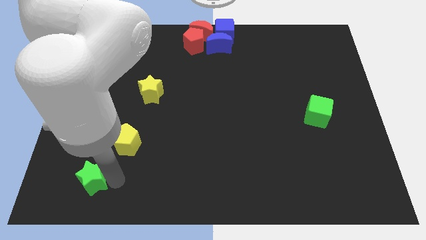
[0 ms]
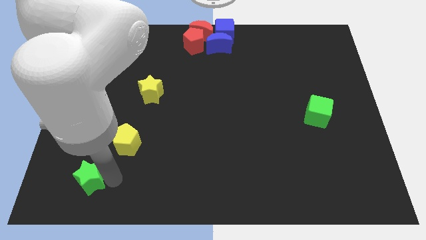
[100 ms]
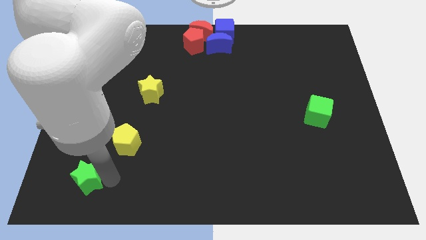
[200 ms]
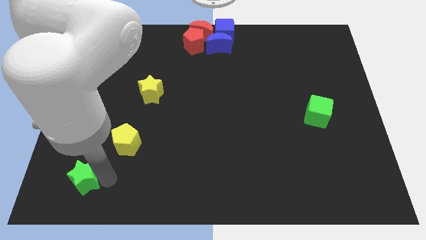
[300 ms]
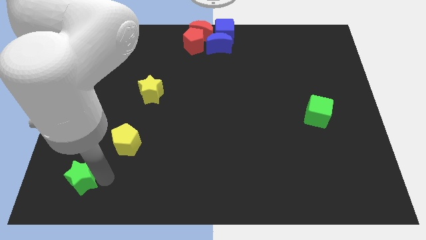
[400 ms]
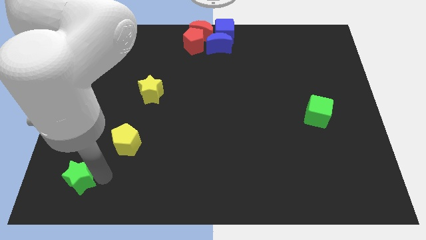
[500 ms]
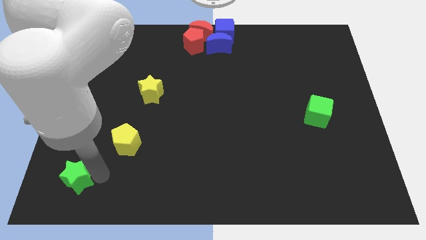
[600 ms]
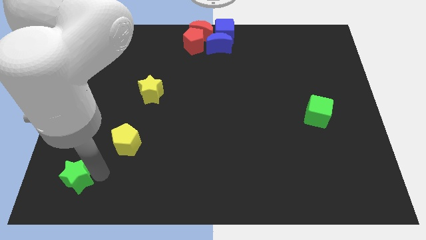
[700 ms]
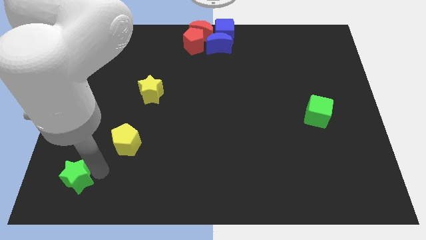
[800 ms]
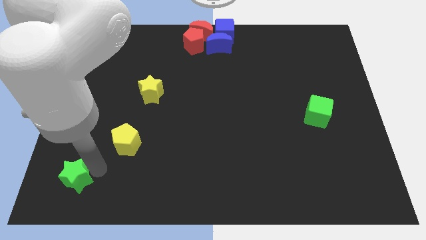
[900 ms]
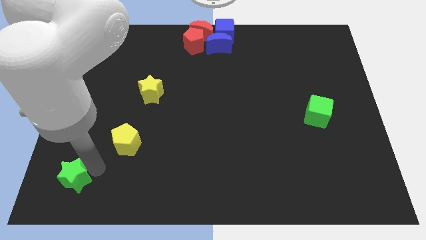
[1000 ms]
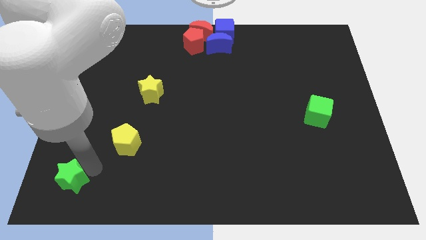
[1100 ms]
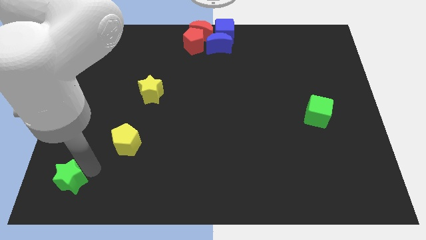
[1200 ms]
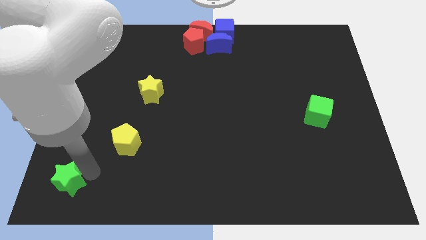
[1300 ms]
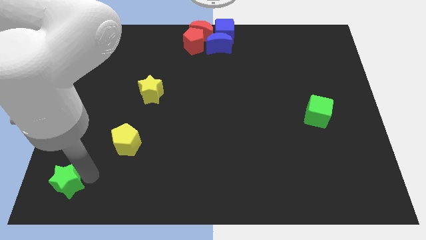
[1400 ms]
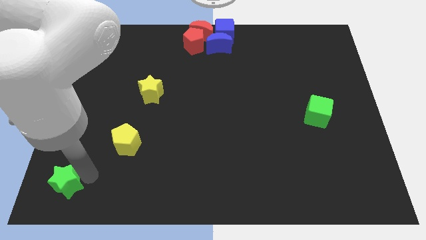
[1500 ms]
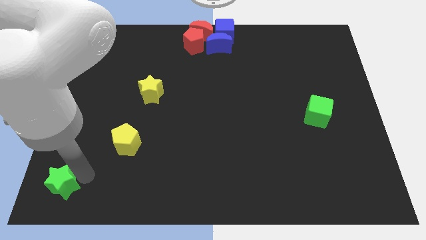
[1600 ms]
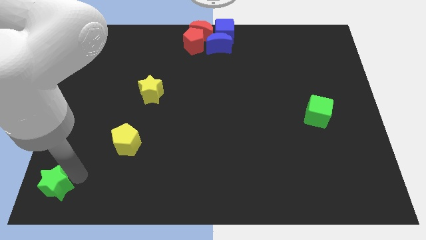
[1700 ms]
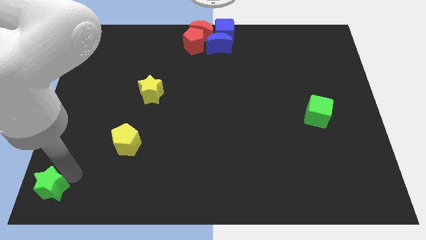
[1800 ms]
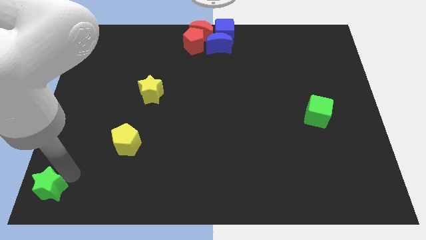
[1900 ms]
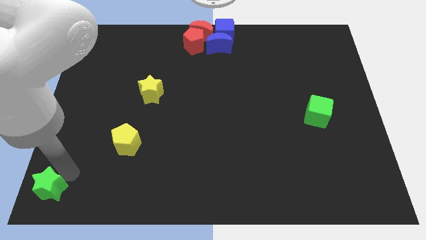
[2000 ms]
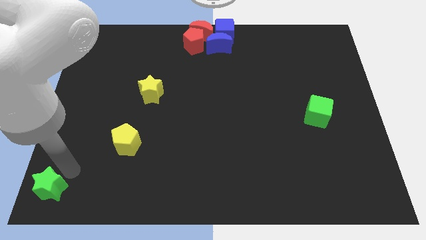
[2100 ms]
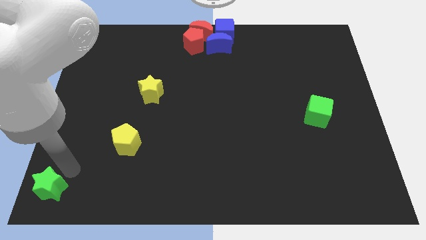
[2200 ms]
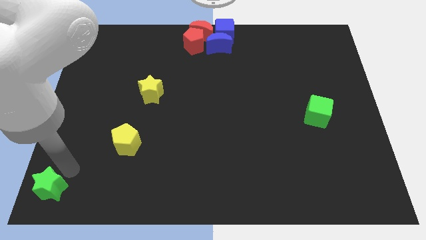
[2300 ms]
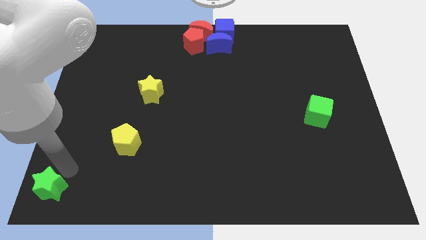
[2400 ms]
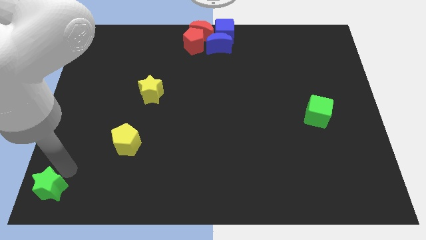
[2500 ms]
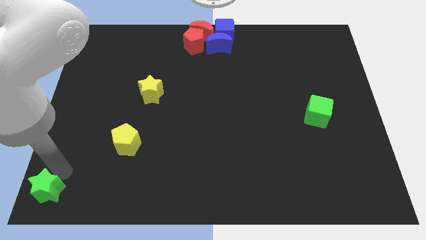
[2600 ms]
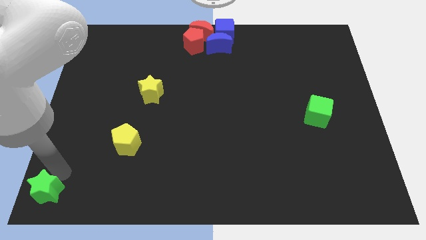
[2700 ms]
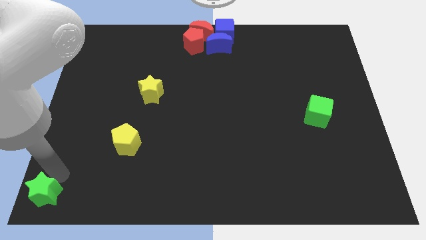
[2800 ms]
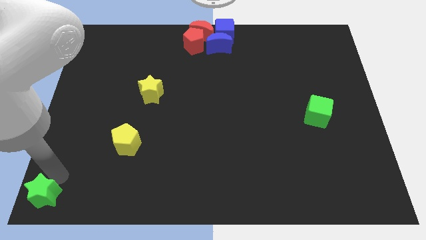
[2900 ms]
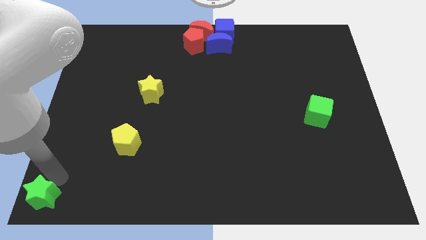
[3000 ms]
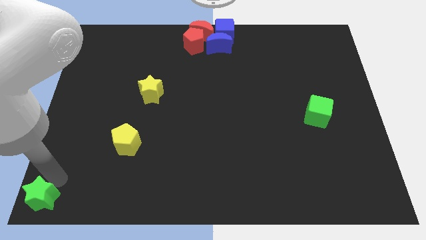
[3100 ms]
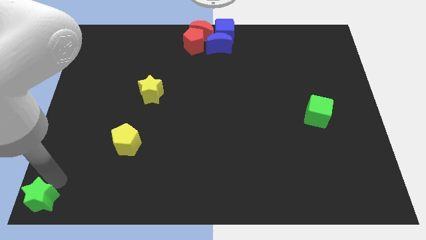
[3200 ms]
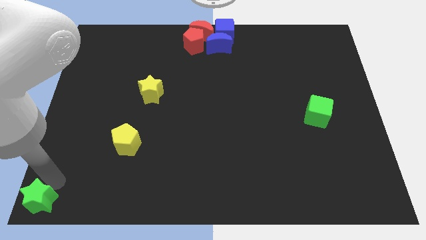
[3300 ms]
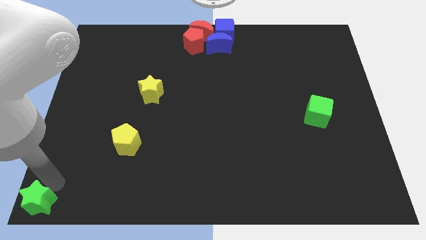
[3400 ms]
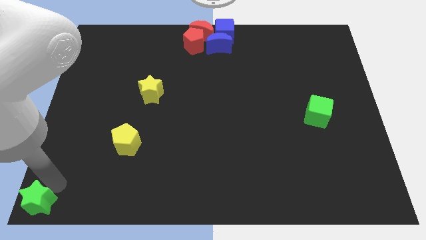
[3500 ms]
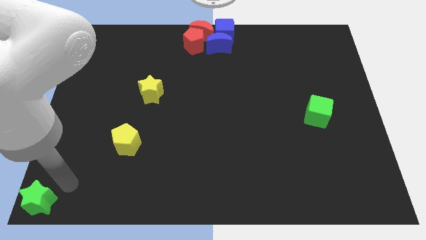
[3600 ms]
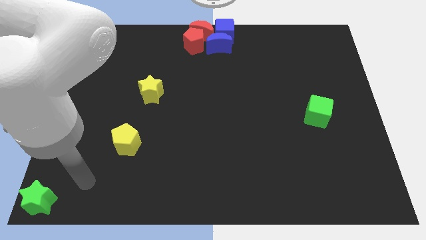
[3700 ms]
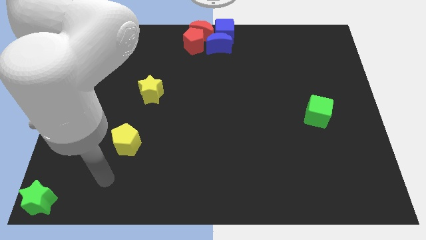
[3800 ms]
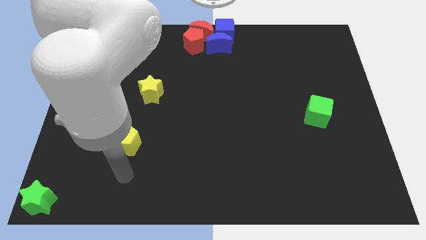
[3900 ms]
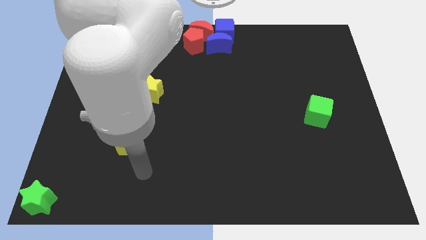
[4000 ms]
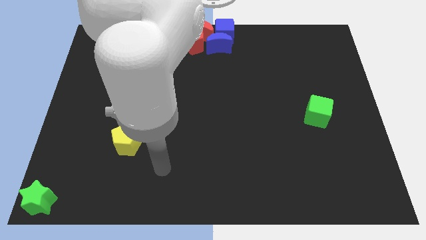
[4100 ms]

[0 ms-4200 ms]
place the green star at bottom left corner of the board

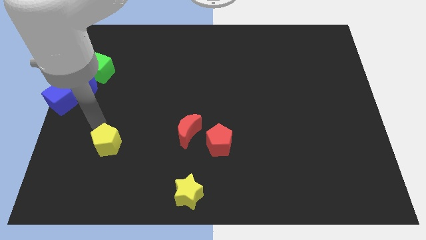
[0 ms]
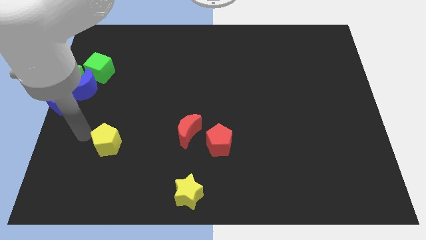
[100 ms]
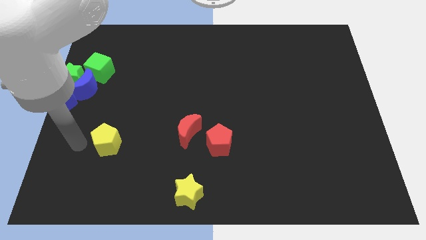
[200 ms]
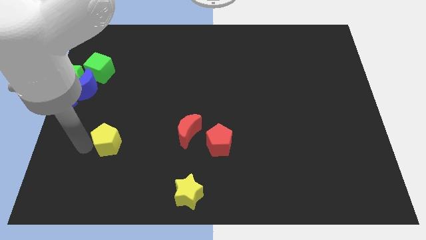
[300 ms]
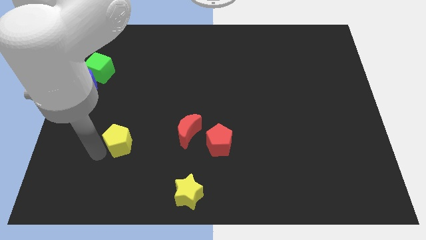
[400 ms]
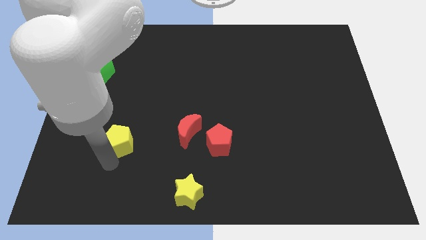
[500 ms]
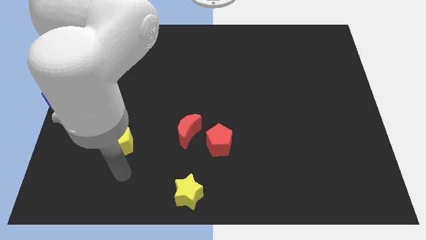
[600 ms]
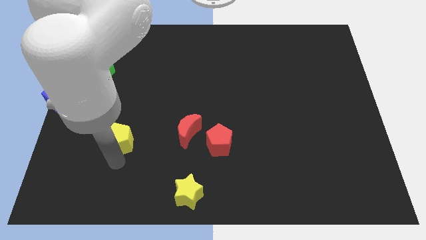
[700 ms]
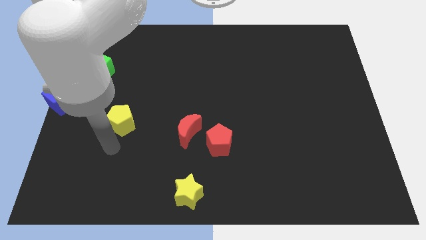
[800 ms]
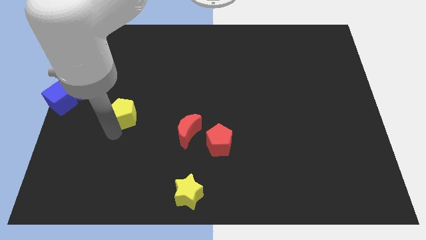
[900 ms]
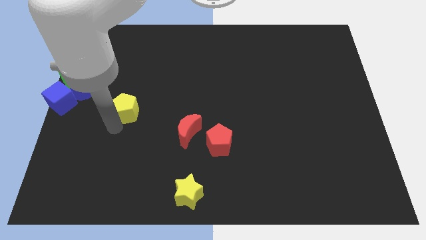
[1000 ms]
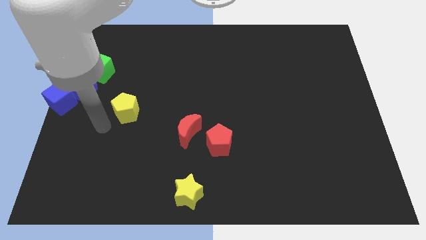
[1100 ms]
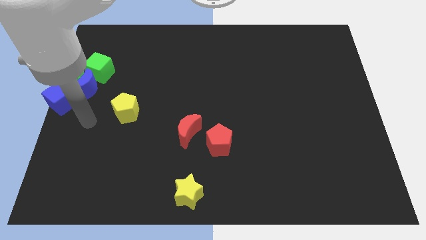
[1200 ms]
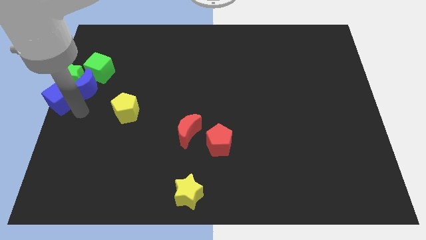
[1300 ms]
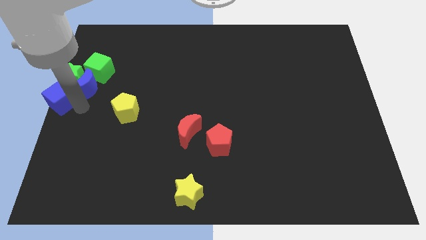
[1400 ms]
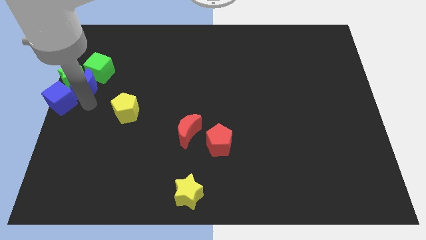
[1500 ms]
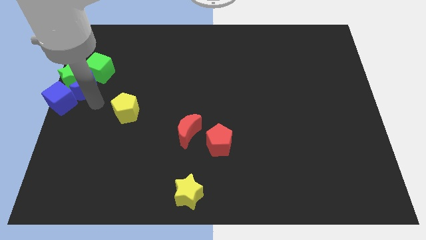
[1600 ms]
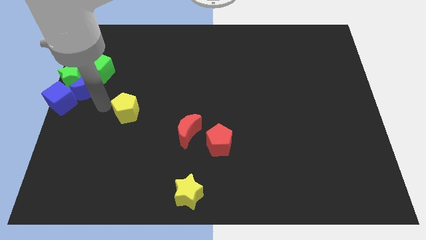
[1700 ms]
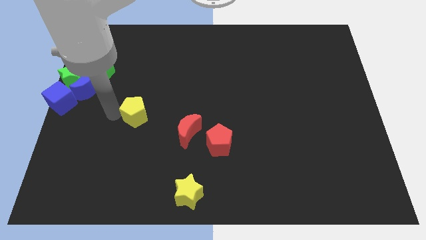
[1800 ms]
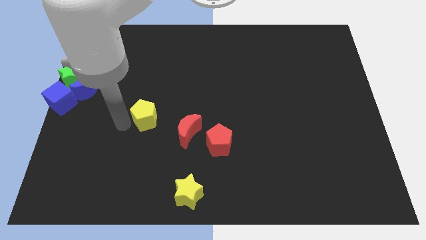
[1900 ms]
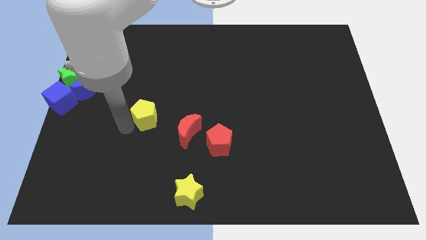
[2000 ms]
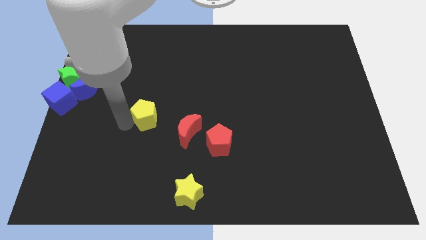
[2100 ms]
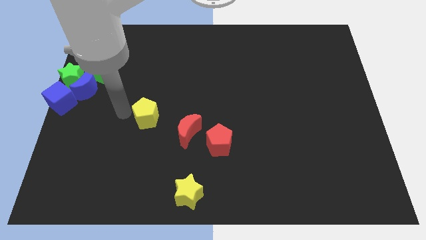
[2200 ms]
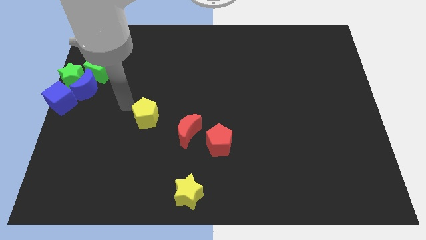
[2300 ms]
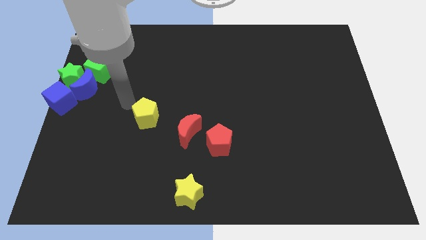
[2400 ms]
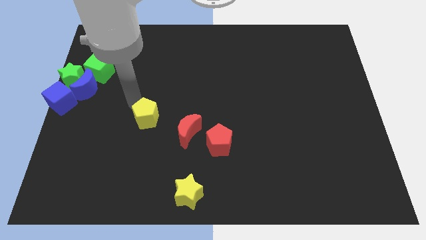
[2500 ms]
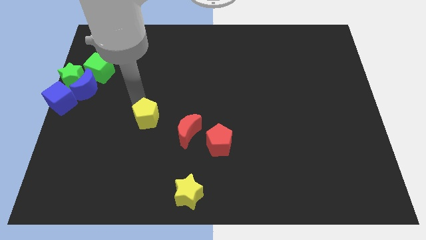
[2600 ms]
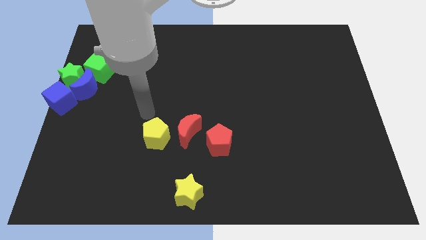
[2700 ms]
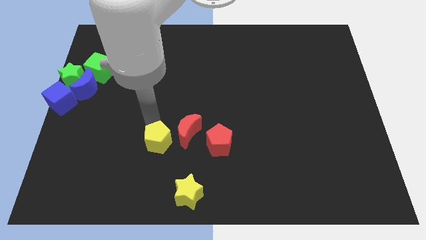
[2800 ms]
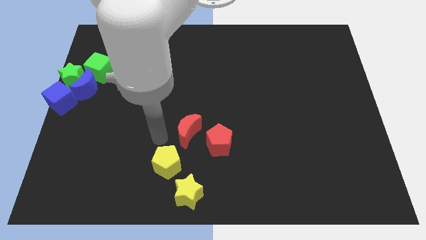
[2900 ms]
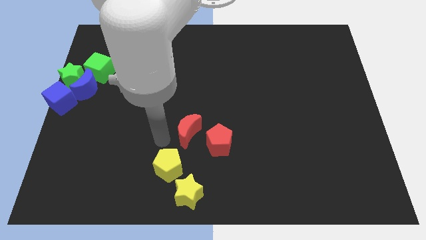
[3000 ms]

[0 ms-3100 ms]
move the yellow pentagon to the top left of the yellow star

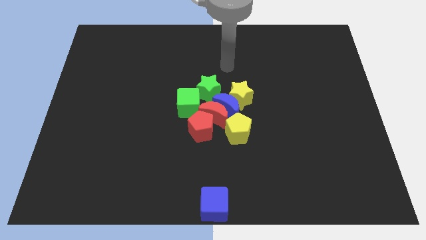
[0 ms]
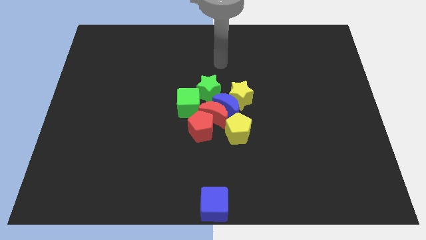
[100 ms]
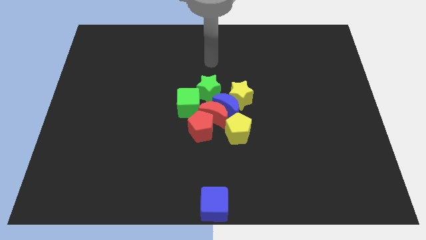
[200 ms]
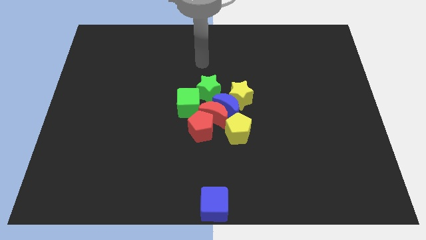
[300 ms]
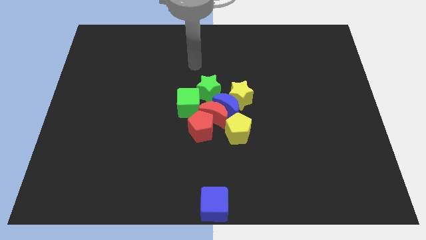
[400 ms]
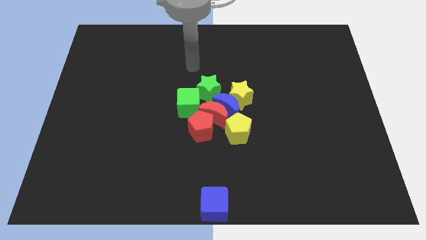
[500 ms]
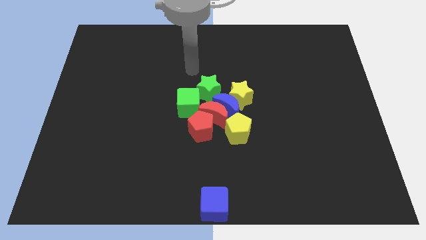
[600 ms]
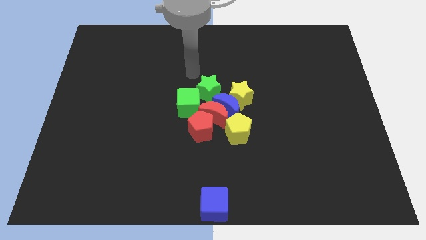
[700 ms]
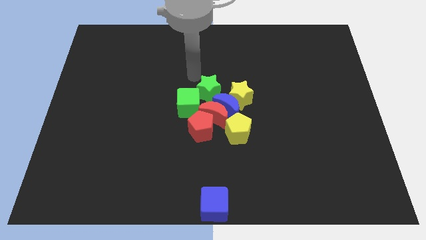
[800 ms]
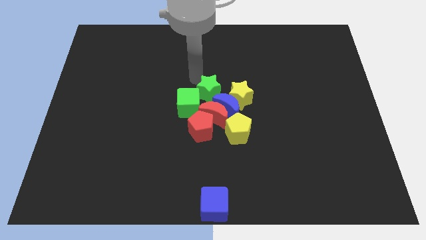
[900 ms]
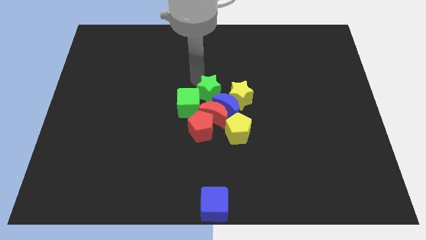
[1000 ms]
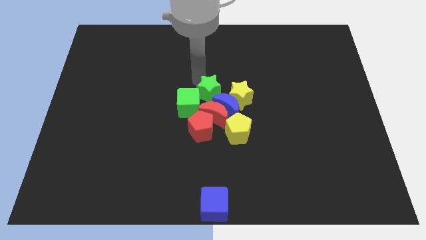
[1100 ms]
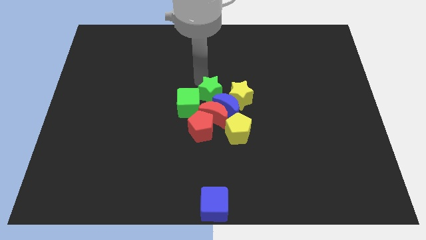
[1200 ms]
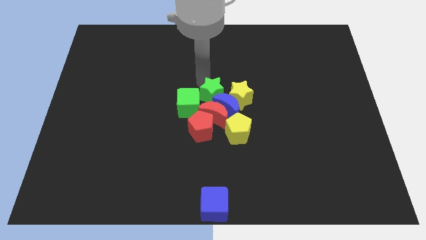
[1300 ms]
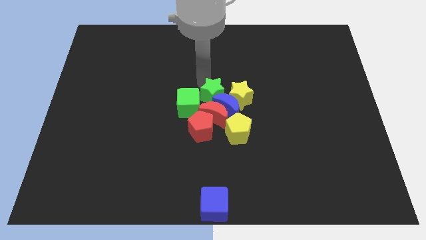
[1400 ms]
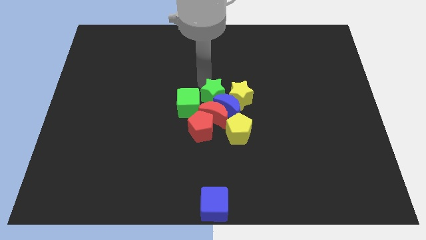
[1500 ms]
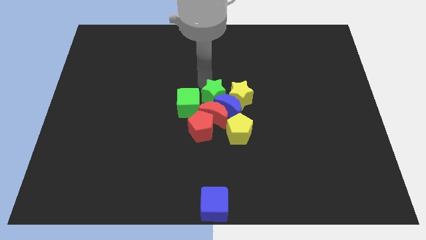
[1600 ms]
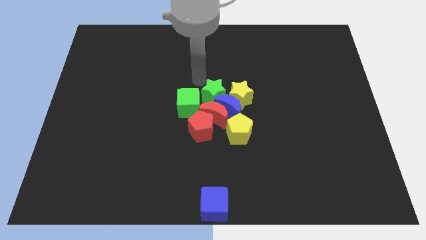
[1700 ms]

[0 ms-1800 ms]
move the green star into the blue crescent
